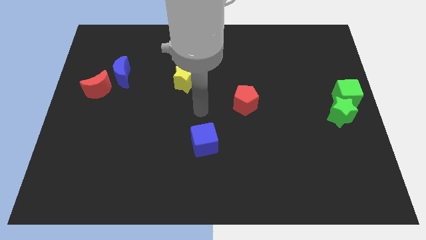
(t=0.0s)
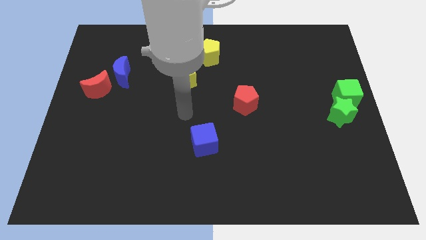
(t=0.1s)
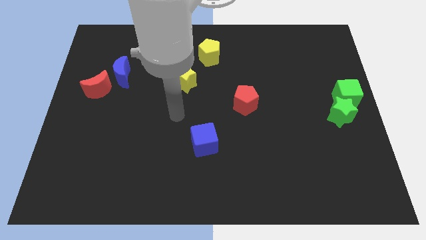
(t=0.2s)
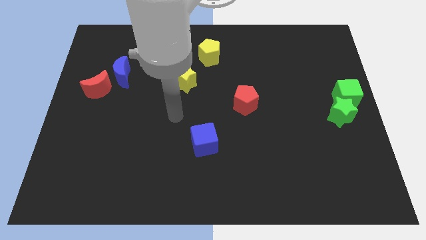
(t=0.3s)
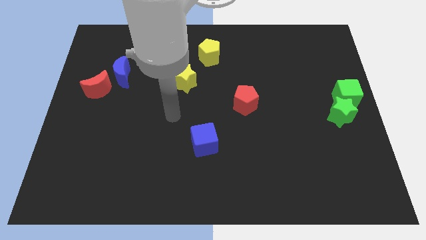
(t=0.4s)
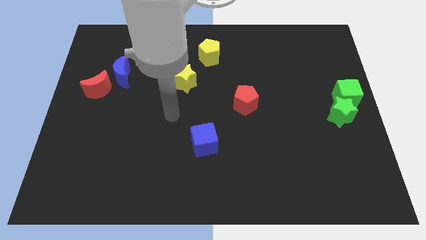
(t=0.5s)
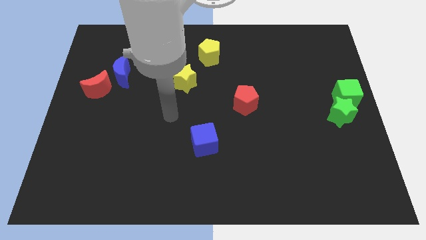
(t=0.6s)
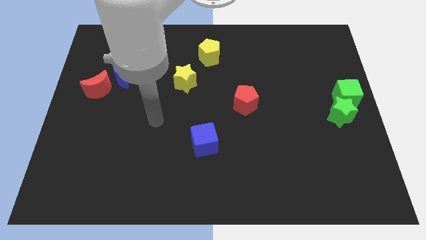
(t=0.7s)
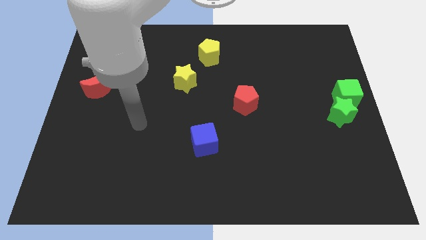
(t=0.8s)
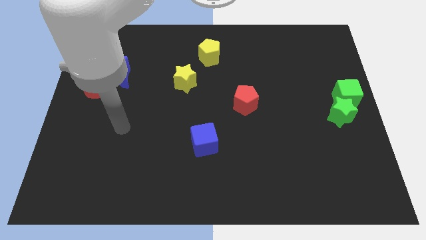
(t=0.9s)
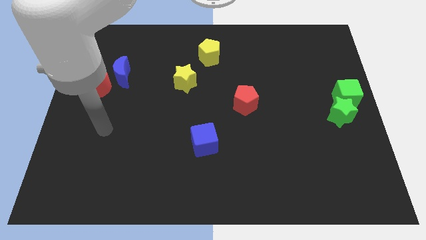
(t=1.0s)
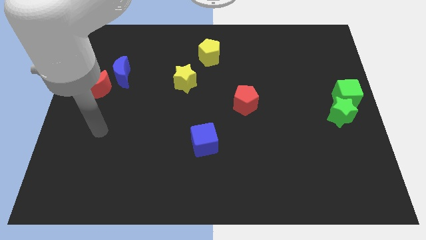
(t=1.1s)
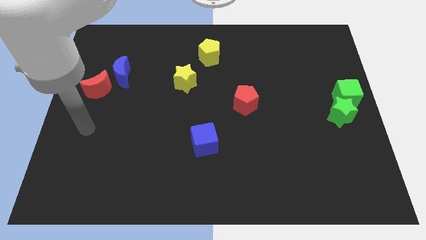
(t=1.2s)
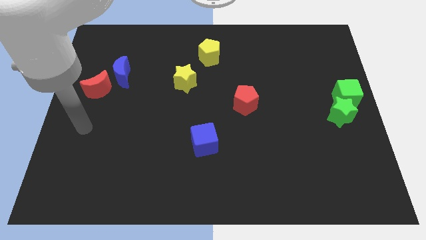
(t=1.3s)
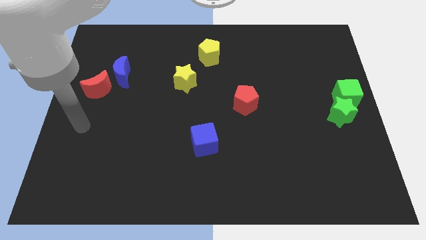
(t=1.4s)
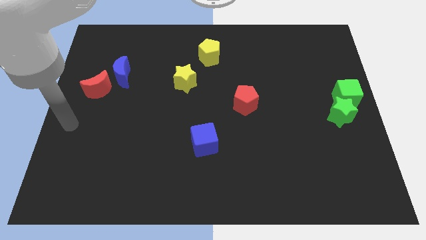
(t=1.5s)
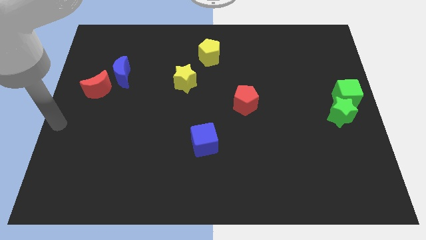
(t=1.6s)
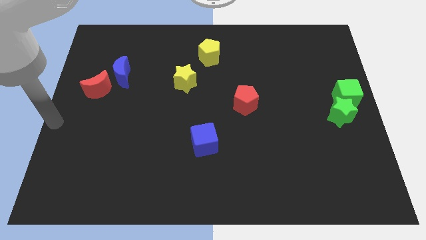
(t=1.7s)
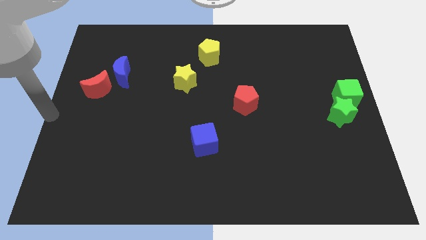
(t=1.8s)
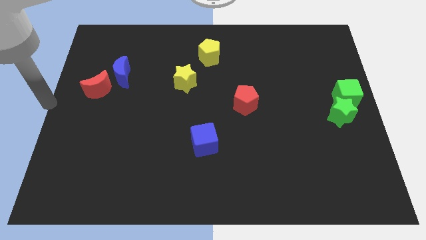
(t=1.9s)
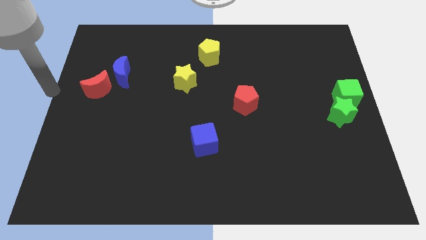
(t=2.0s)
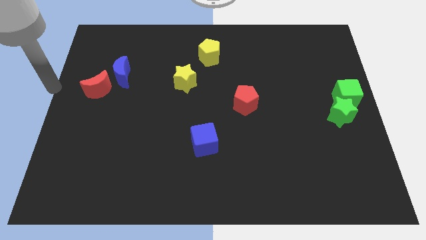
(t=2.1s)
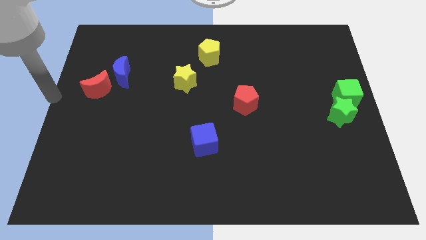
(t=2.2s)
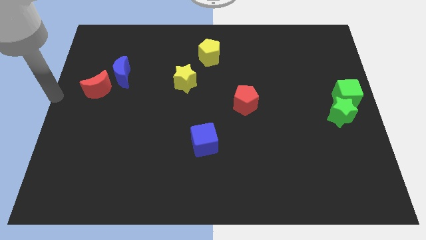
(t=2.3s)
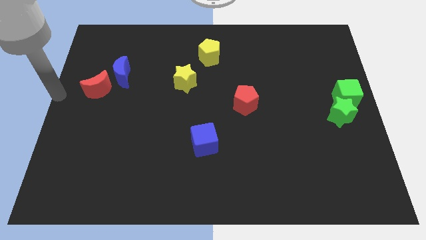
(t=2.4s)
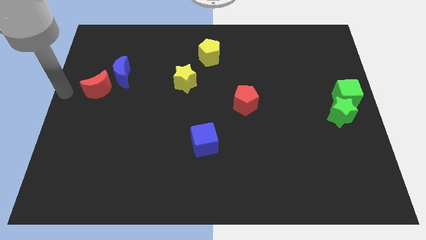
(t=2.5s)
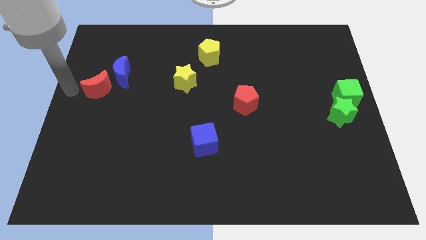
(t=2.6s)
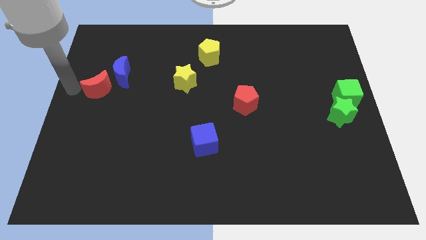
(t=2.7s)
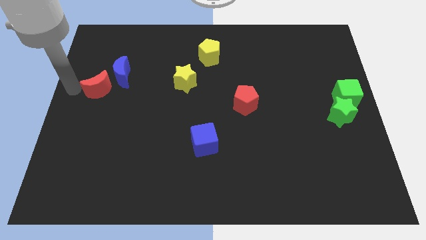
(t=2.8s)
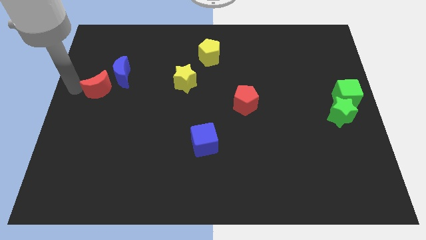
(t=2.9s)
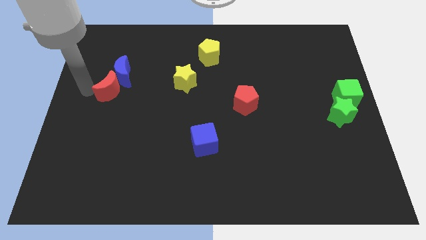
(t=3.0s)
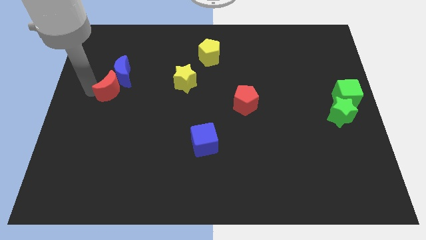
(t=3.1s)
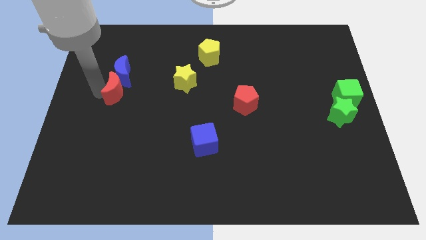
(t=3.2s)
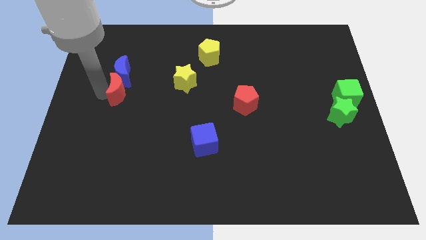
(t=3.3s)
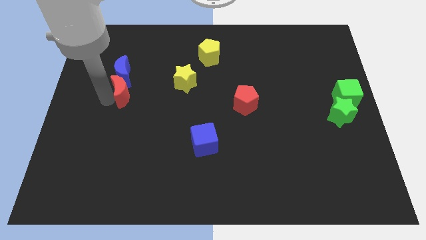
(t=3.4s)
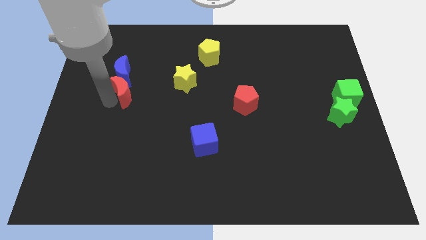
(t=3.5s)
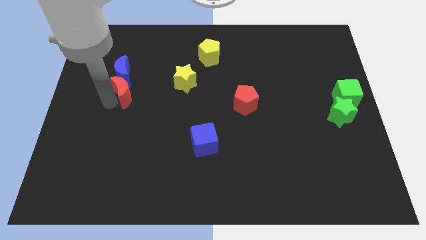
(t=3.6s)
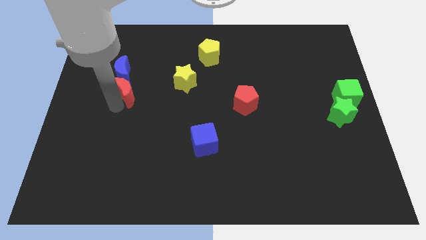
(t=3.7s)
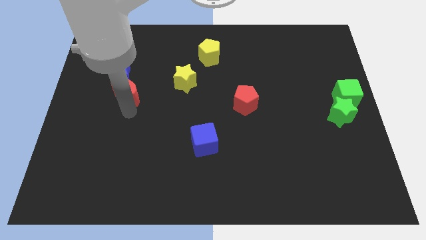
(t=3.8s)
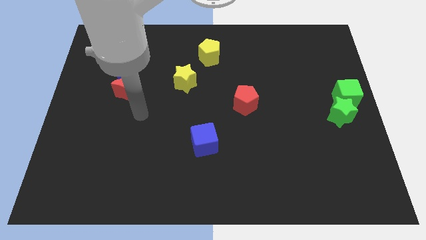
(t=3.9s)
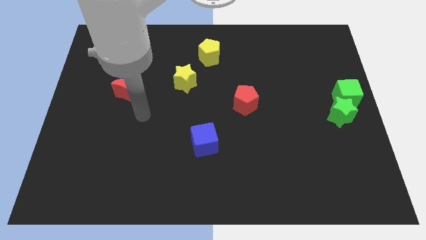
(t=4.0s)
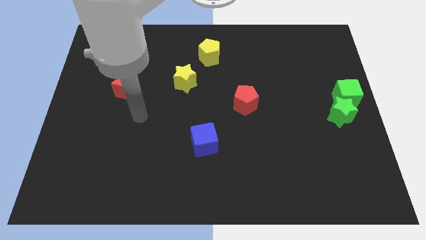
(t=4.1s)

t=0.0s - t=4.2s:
place the blue crescent below the red crescent

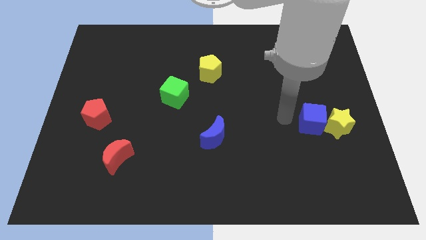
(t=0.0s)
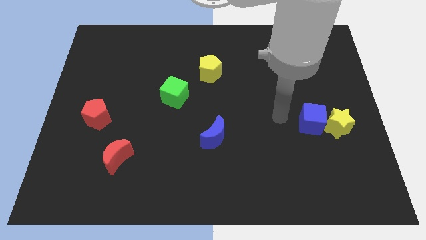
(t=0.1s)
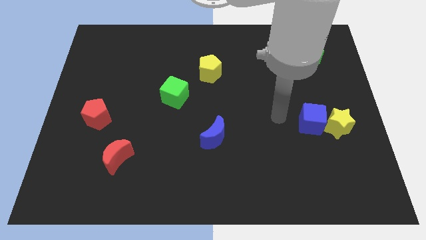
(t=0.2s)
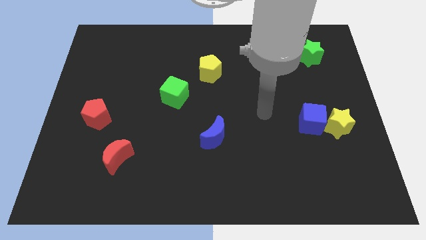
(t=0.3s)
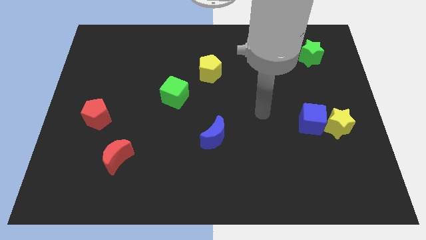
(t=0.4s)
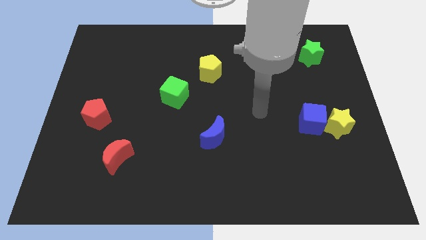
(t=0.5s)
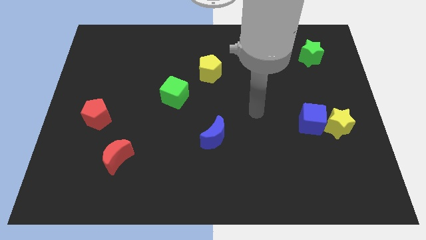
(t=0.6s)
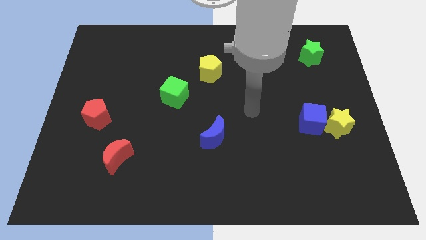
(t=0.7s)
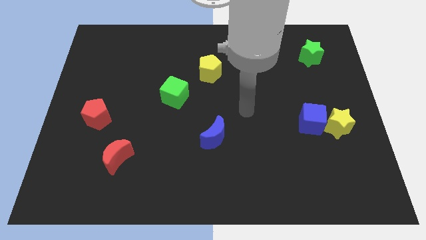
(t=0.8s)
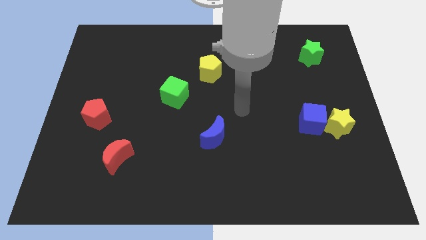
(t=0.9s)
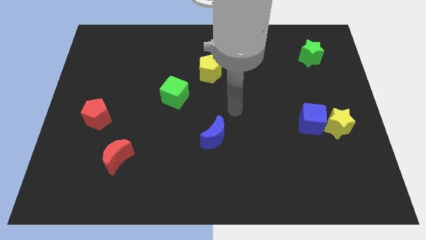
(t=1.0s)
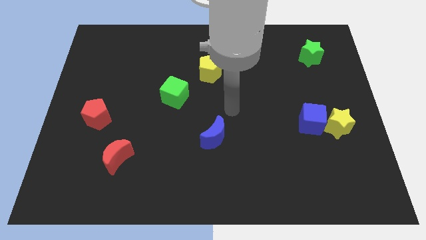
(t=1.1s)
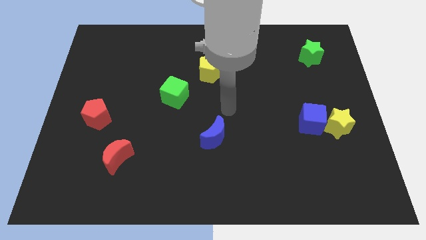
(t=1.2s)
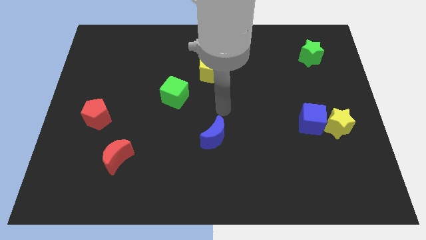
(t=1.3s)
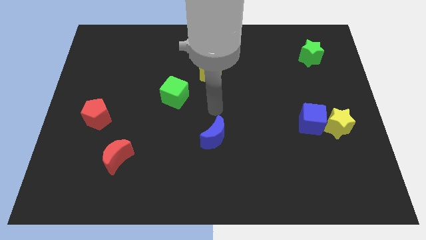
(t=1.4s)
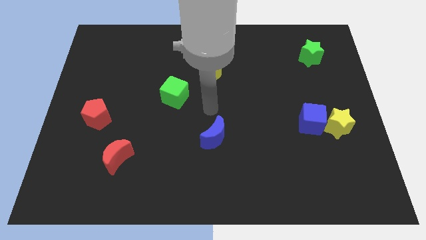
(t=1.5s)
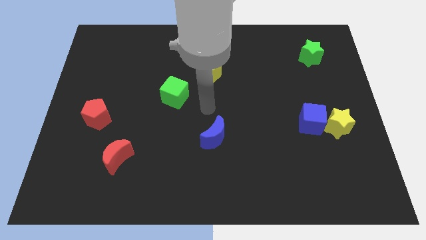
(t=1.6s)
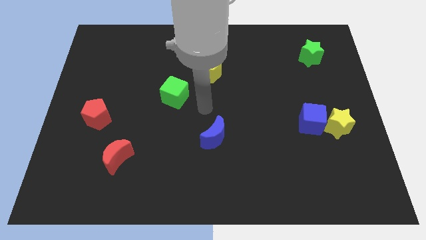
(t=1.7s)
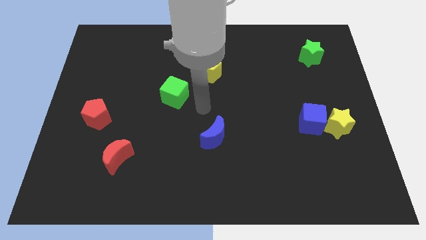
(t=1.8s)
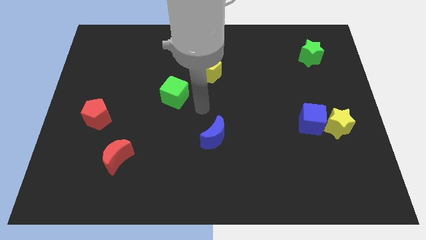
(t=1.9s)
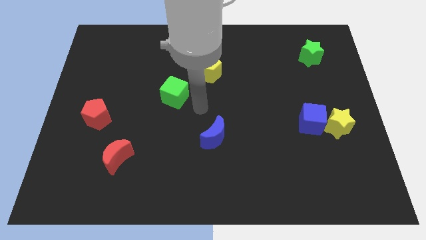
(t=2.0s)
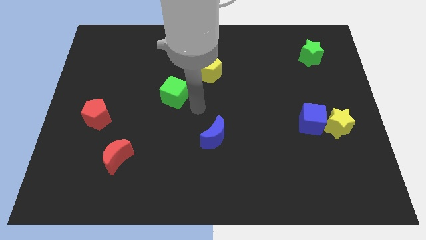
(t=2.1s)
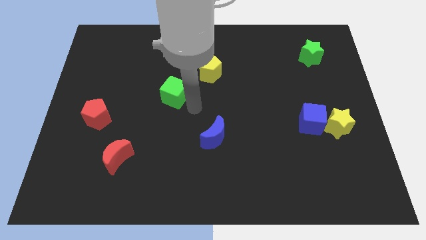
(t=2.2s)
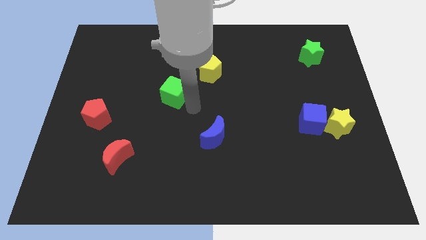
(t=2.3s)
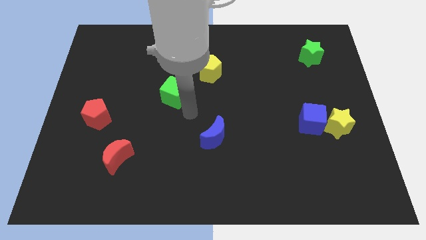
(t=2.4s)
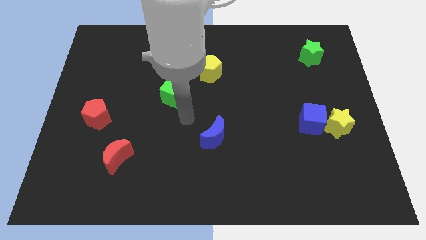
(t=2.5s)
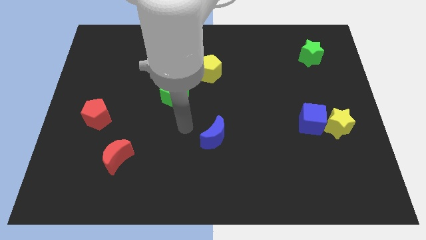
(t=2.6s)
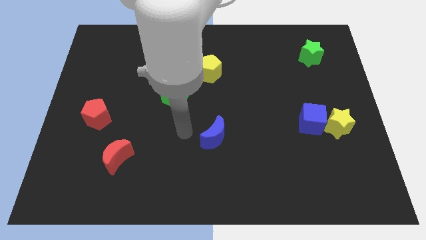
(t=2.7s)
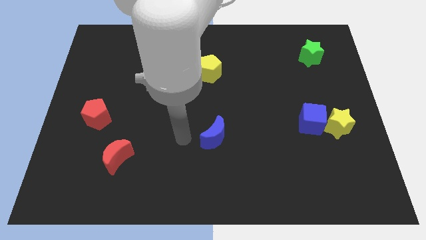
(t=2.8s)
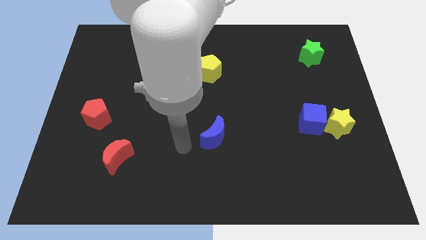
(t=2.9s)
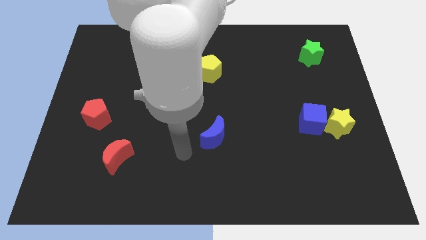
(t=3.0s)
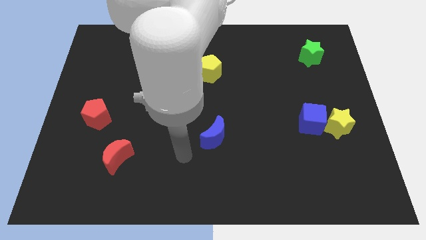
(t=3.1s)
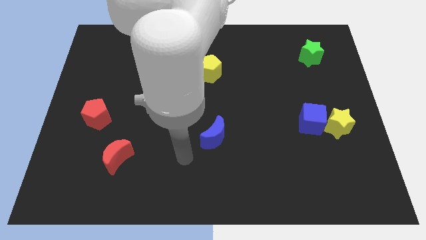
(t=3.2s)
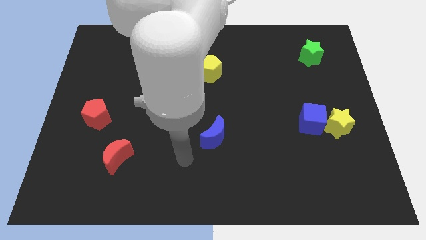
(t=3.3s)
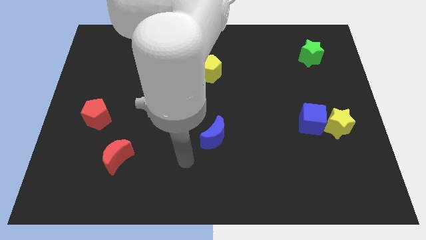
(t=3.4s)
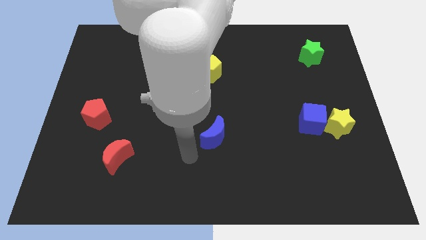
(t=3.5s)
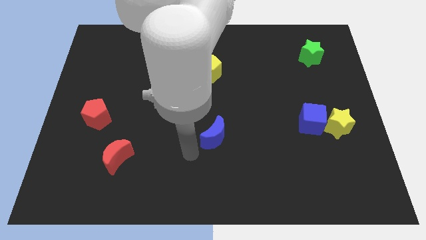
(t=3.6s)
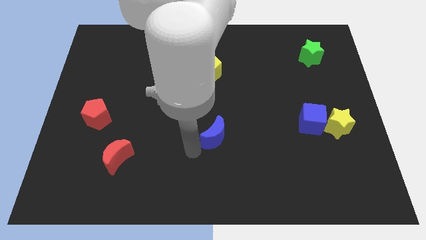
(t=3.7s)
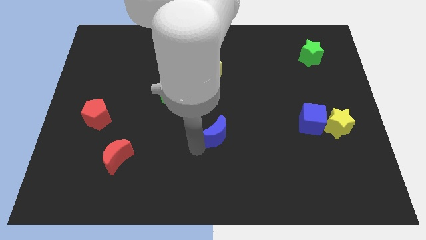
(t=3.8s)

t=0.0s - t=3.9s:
point the arm to the left bottom of the blue moon

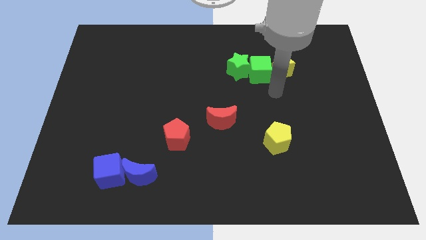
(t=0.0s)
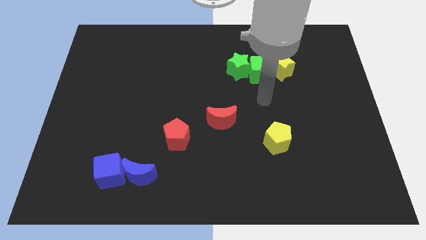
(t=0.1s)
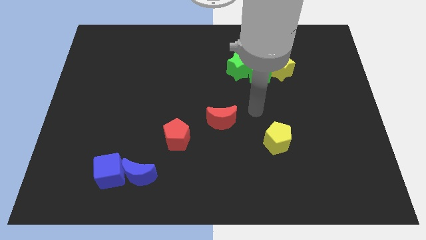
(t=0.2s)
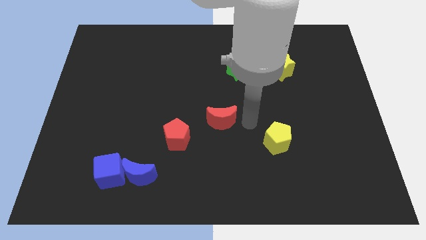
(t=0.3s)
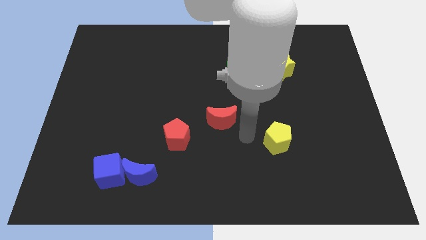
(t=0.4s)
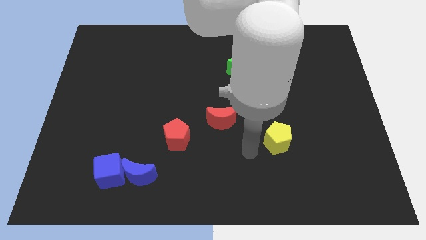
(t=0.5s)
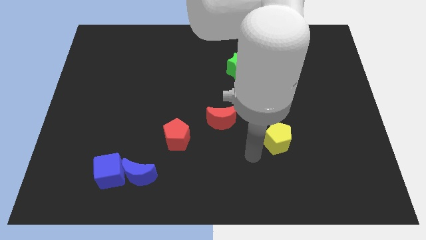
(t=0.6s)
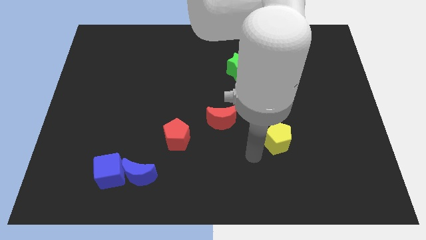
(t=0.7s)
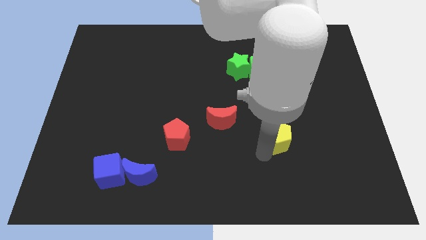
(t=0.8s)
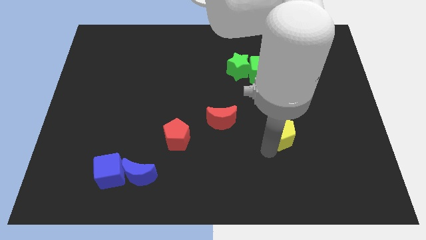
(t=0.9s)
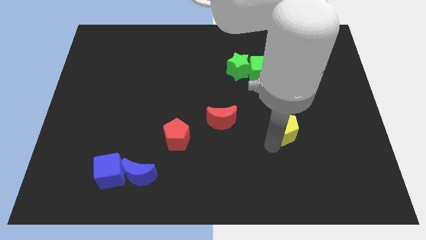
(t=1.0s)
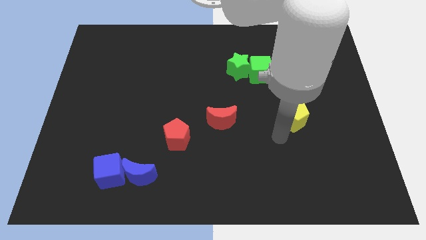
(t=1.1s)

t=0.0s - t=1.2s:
touch the bottom of yellow pentagon
